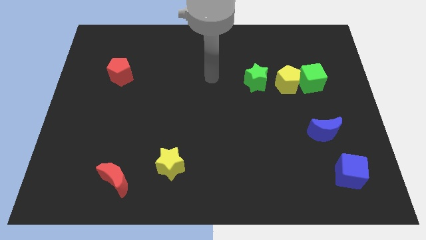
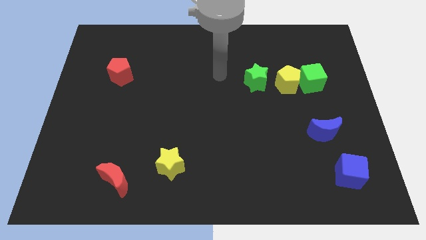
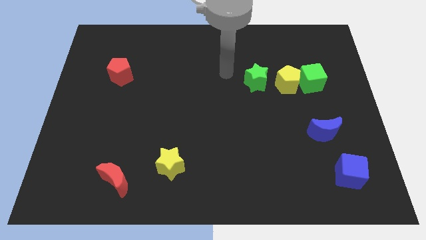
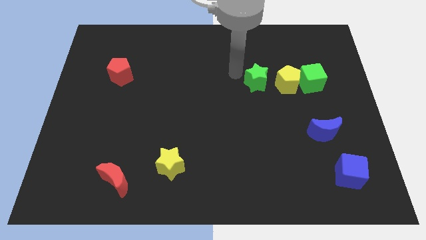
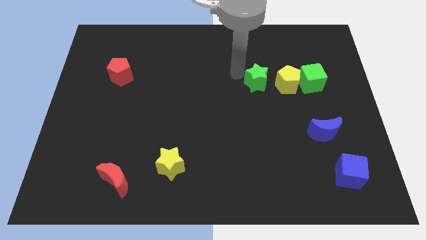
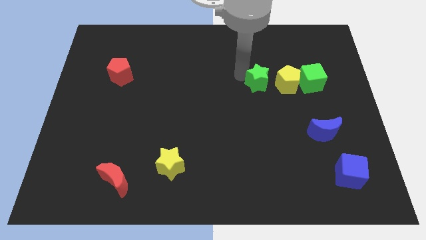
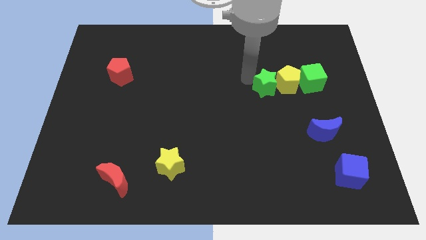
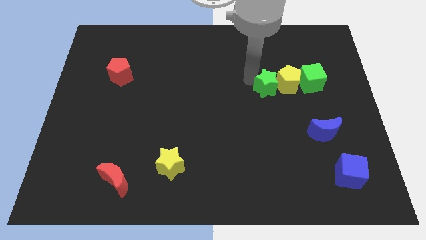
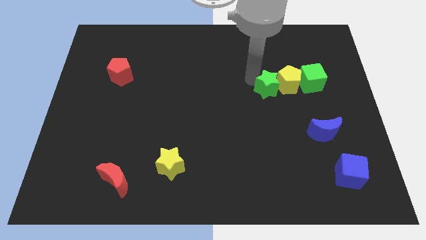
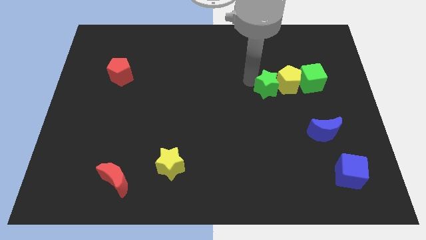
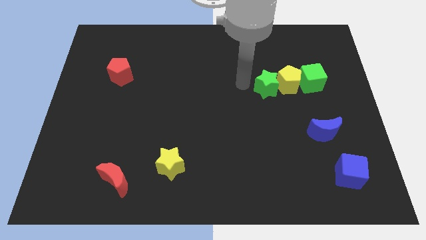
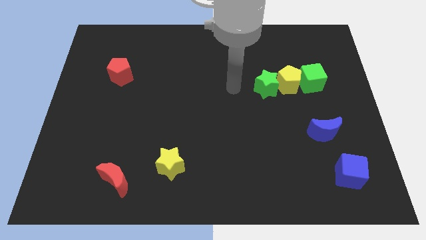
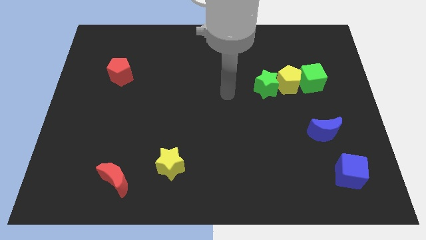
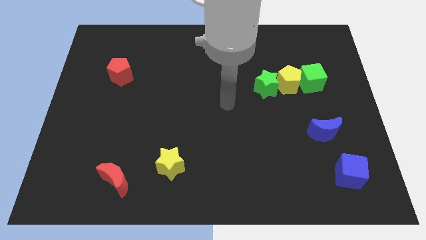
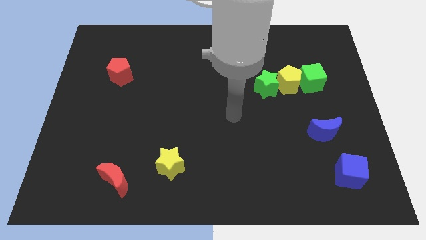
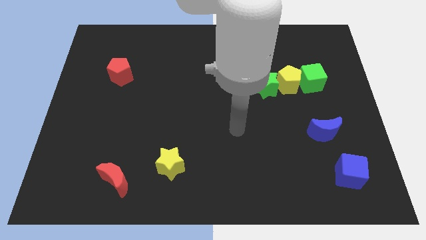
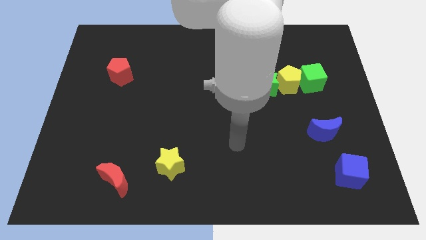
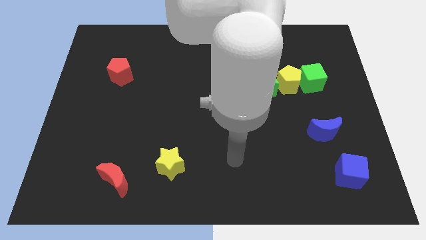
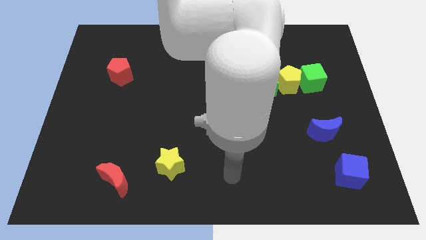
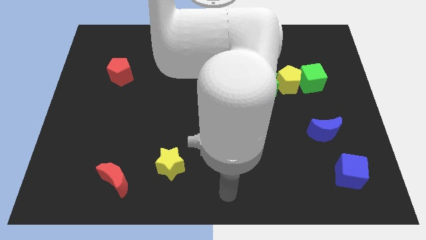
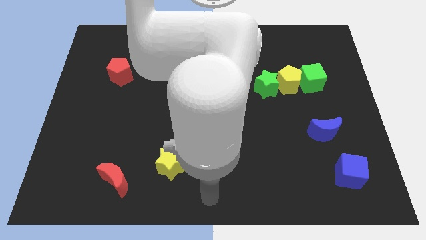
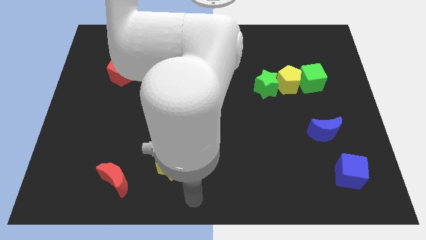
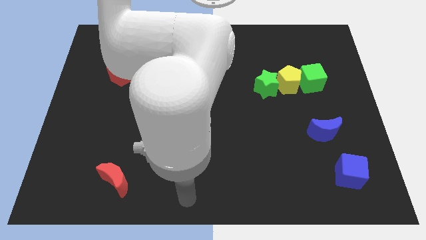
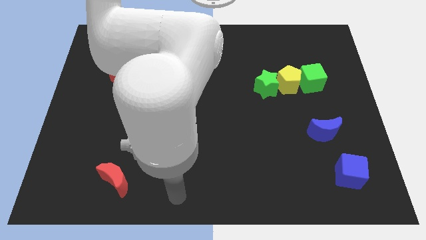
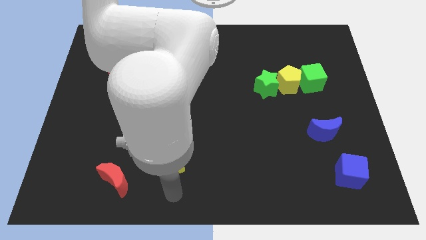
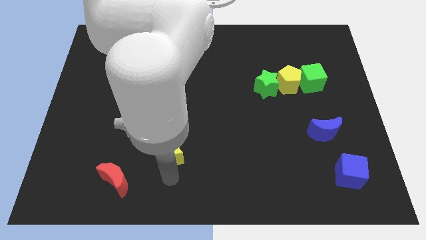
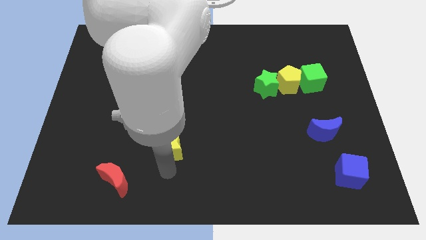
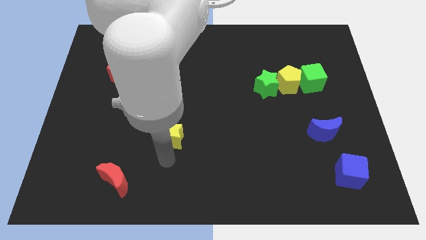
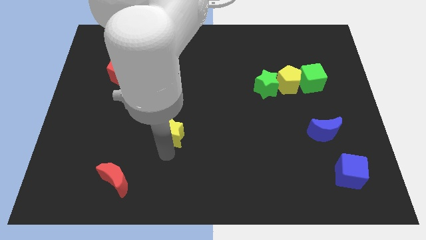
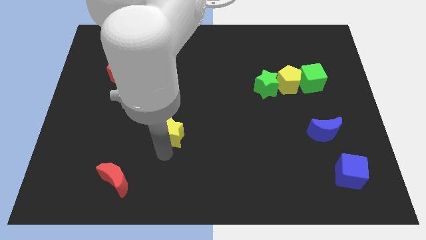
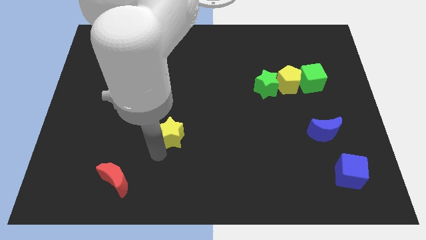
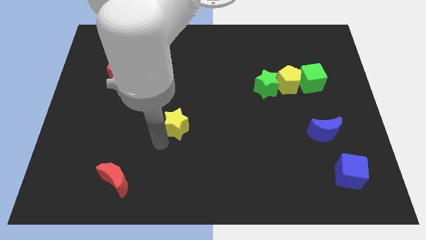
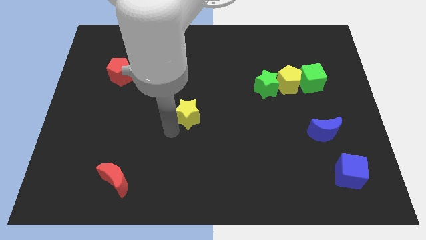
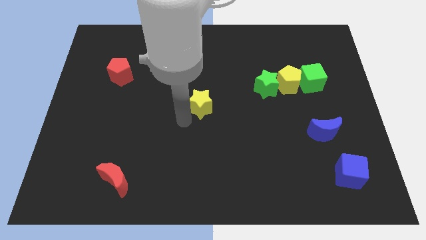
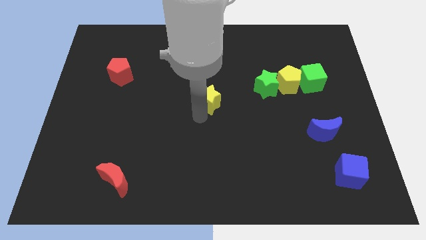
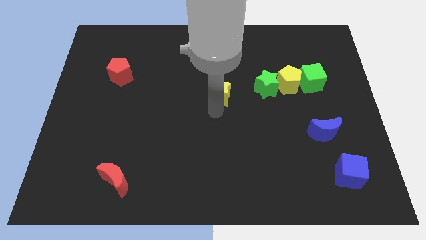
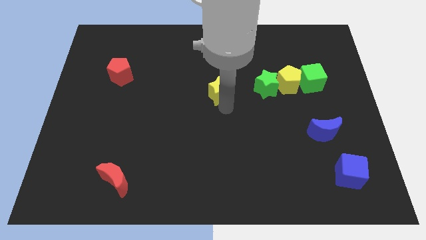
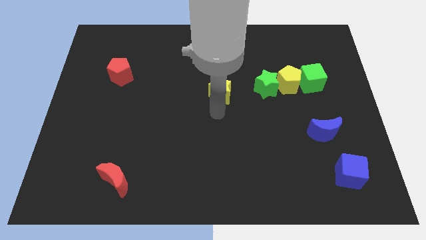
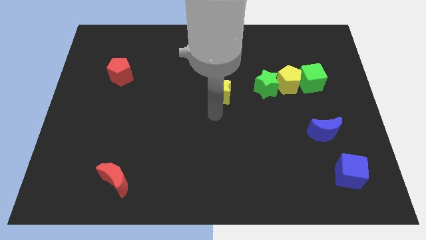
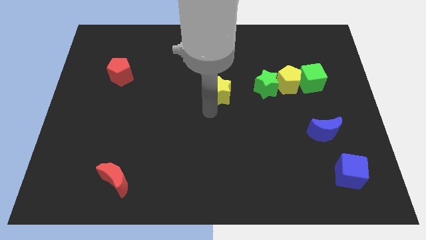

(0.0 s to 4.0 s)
place the yellow star to the left of the green star

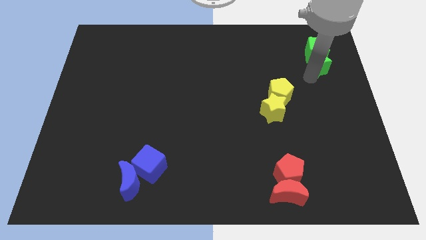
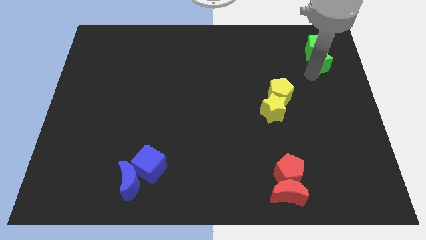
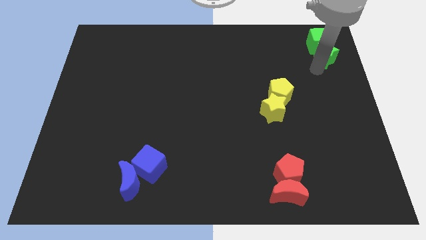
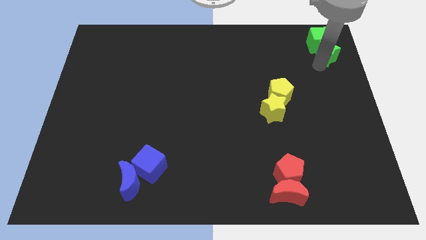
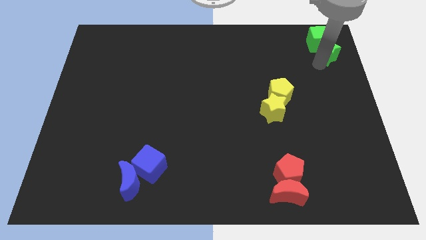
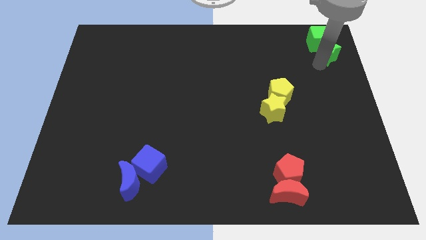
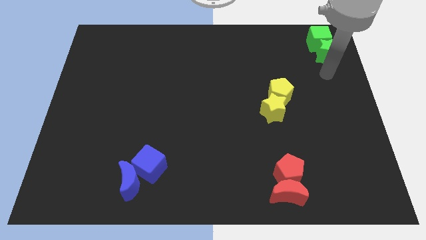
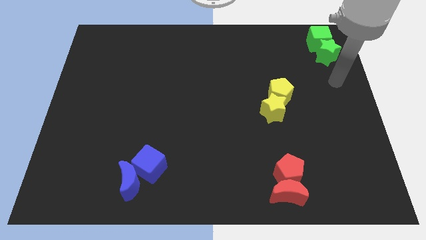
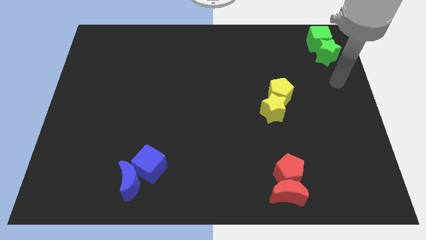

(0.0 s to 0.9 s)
push the green blocks to the top right of the board

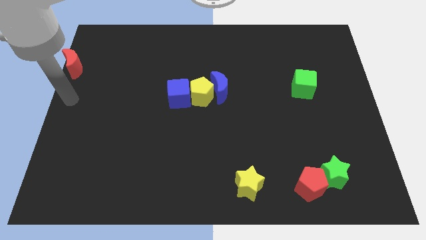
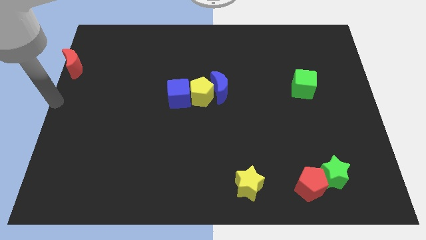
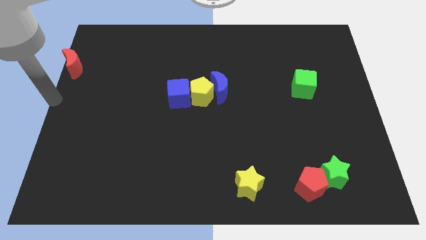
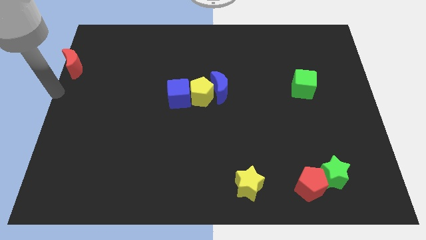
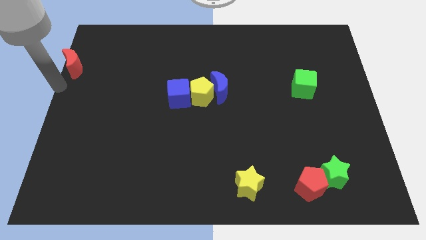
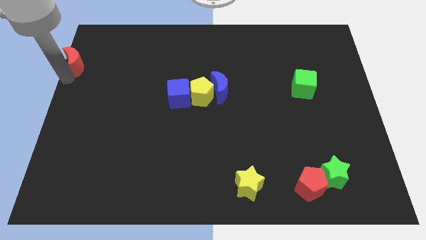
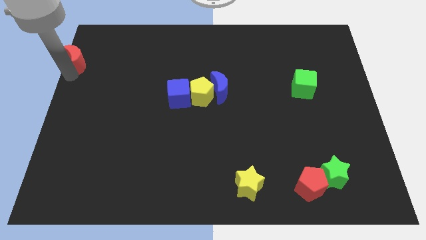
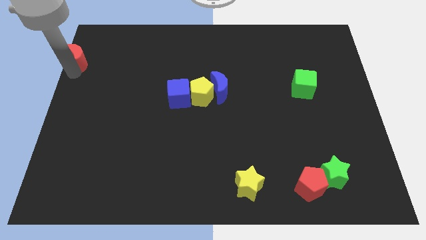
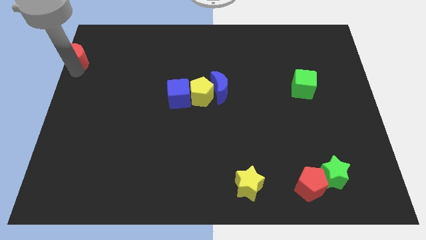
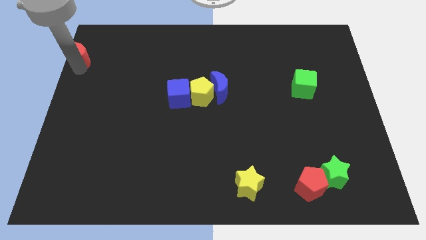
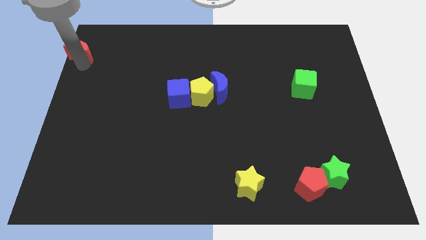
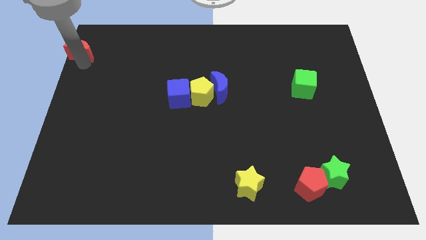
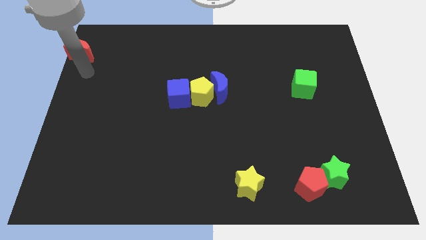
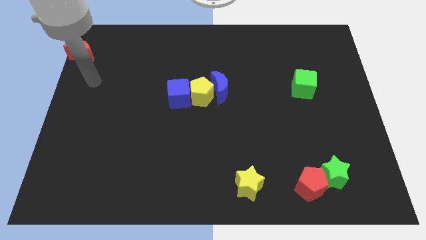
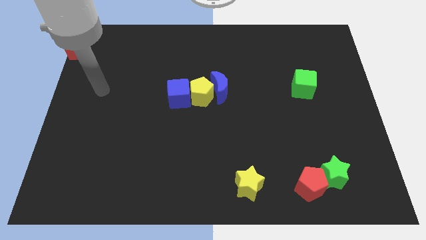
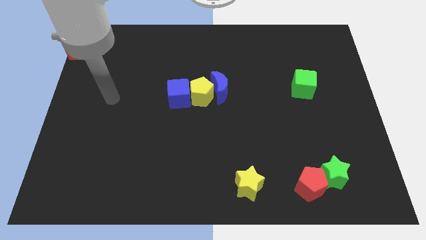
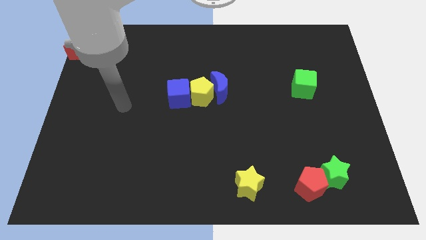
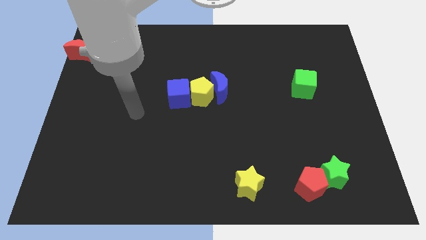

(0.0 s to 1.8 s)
slide the red crescent slightly towards up

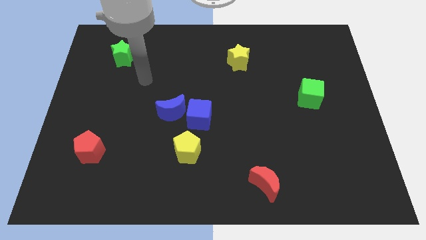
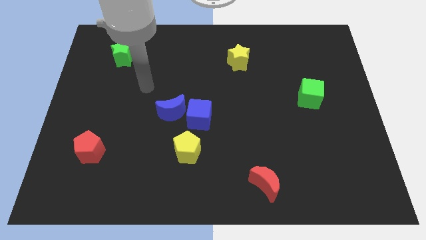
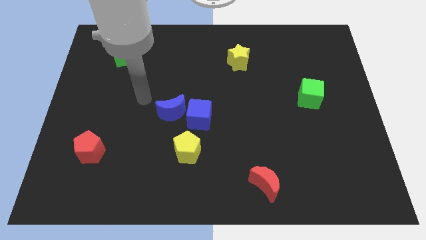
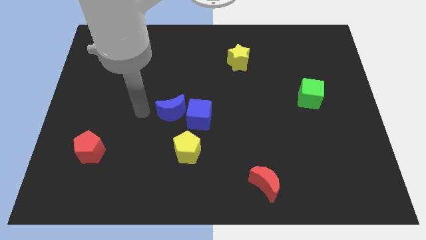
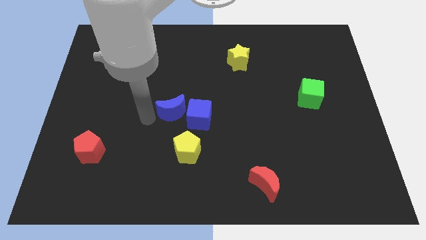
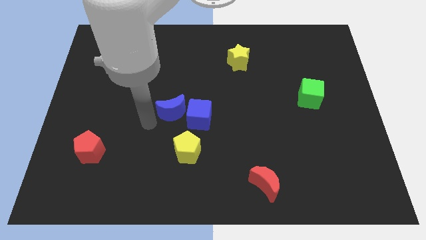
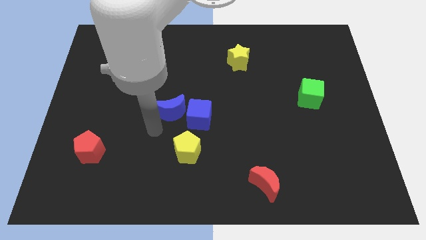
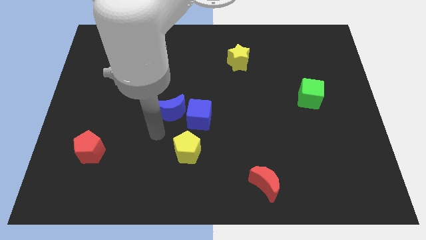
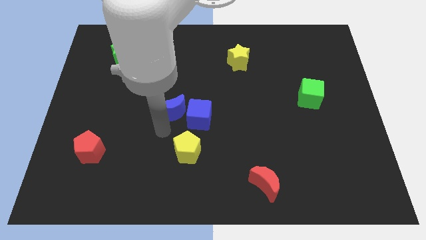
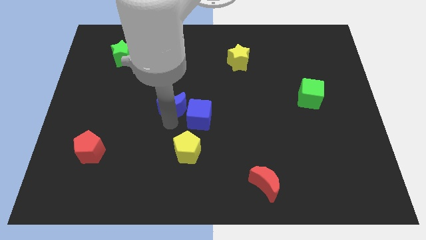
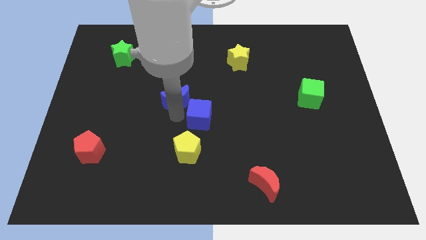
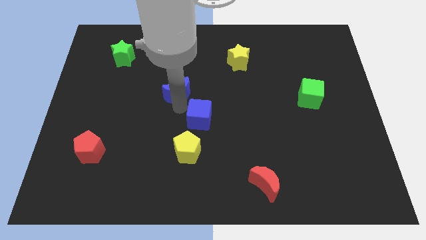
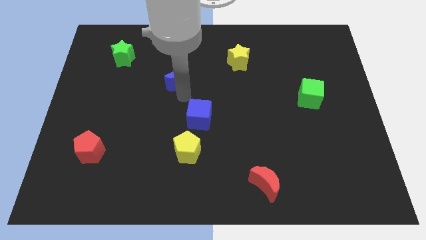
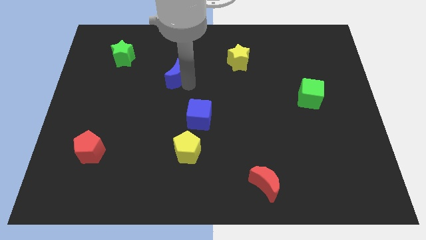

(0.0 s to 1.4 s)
push the blue crescent slightly to the top

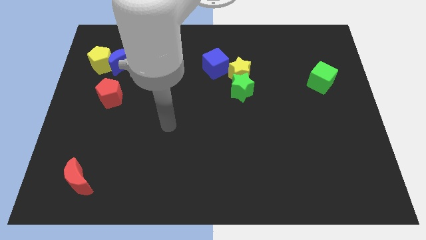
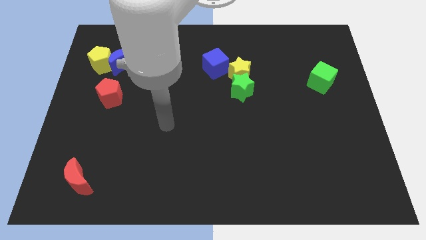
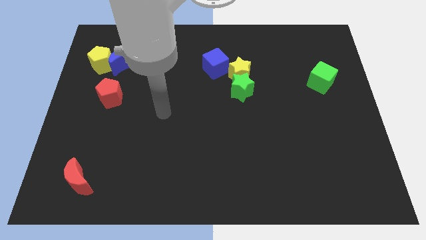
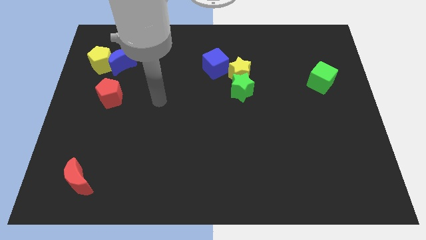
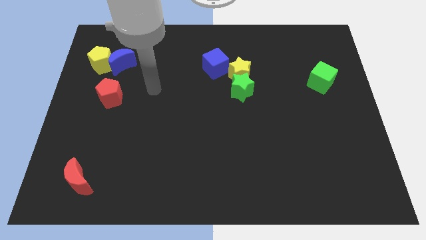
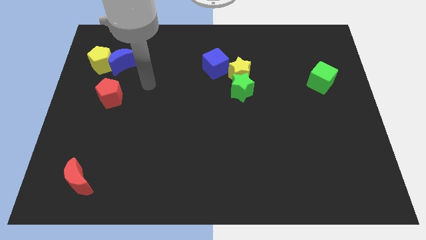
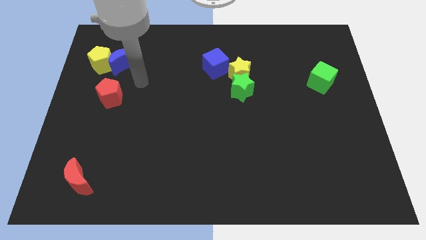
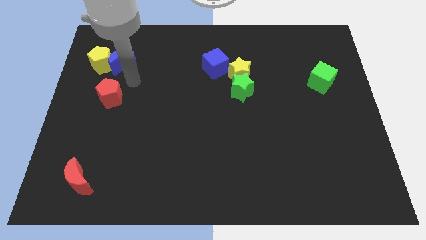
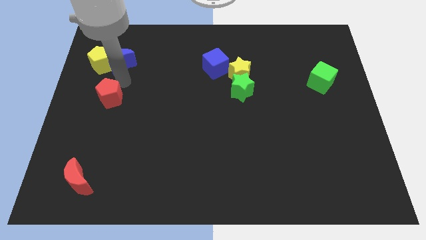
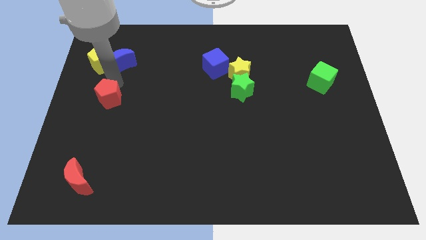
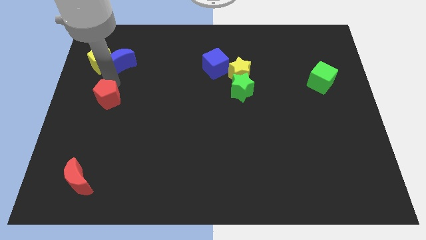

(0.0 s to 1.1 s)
place your arm to the bottom of blue moon
